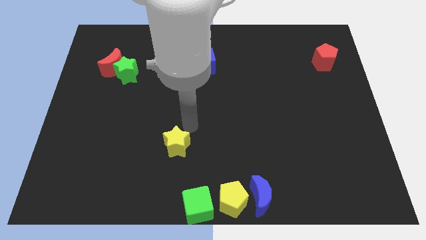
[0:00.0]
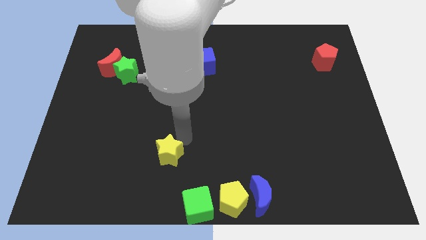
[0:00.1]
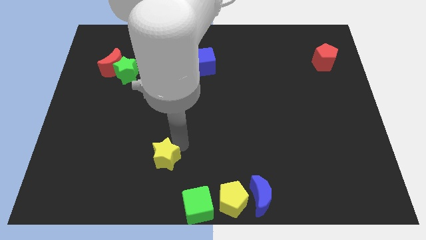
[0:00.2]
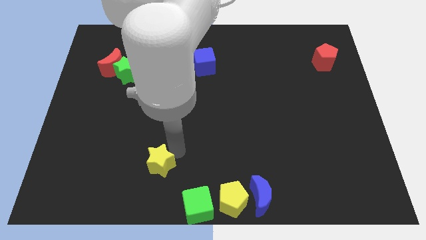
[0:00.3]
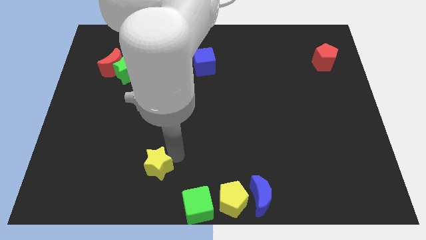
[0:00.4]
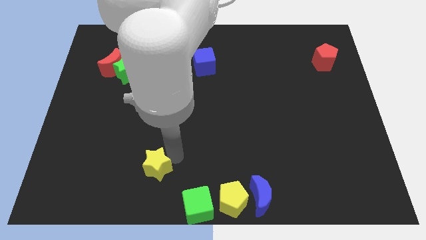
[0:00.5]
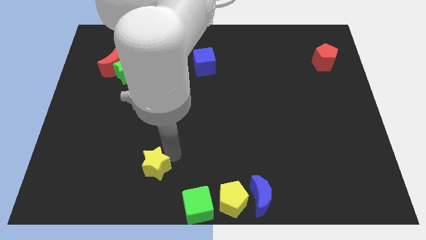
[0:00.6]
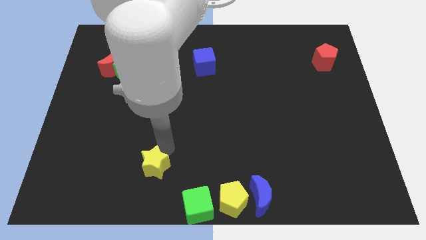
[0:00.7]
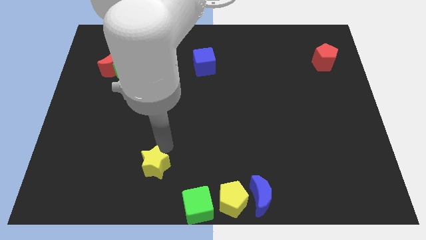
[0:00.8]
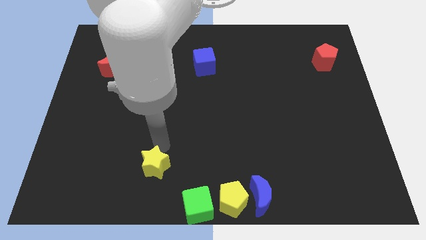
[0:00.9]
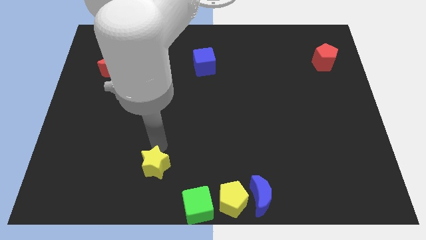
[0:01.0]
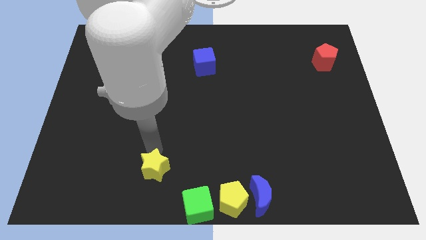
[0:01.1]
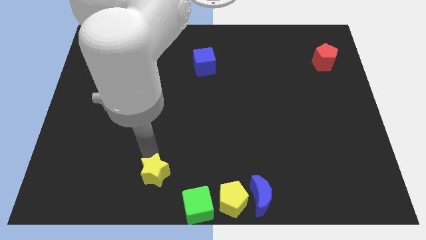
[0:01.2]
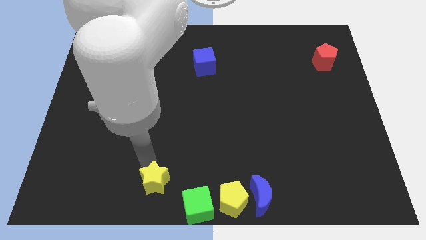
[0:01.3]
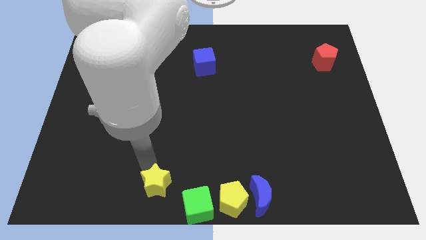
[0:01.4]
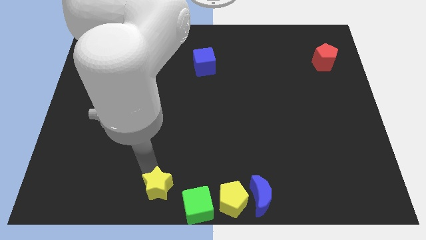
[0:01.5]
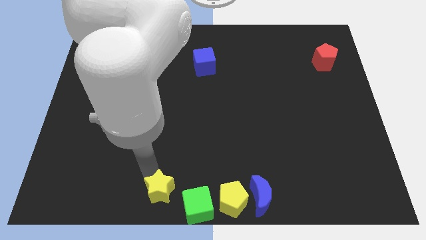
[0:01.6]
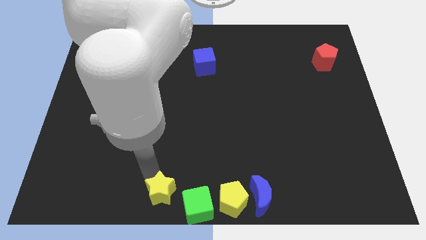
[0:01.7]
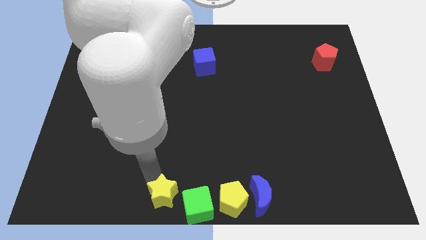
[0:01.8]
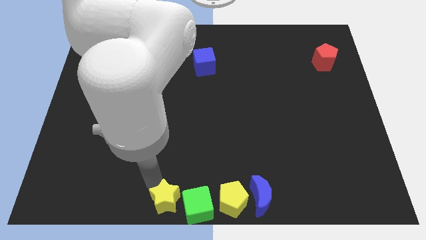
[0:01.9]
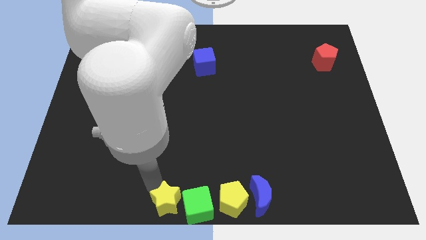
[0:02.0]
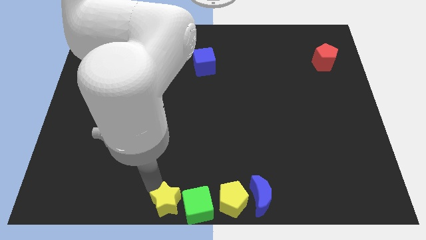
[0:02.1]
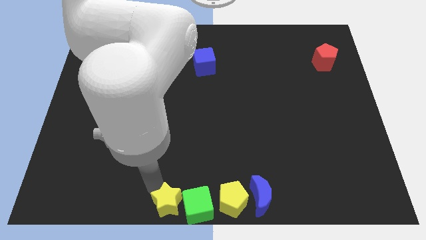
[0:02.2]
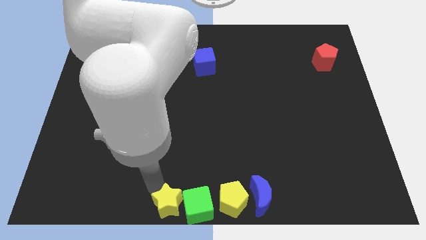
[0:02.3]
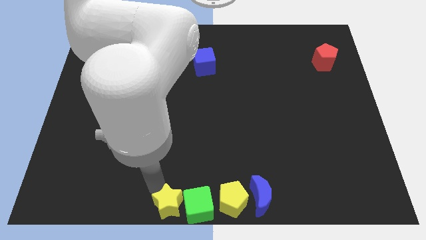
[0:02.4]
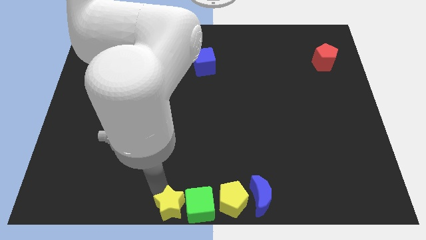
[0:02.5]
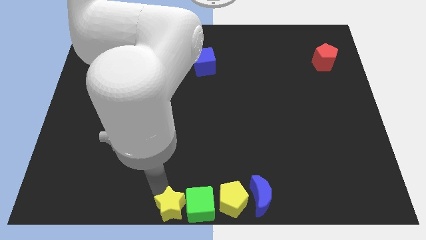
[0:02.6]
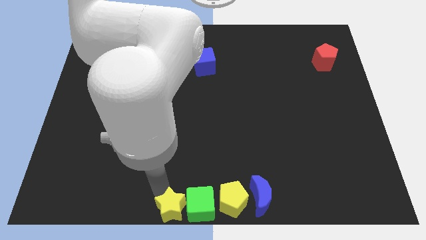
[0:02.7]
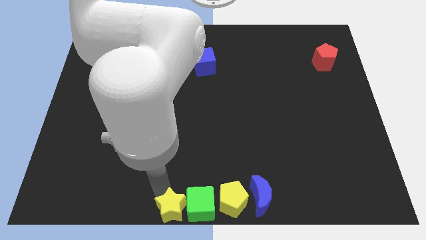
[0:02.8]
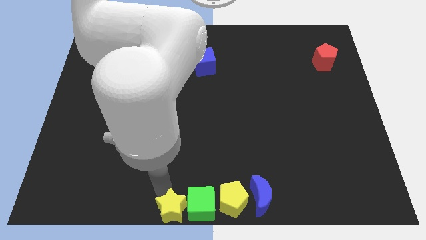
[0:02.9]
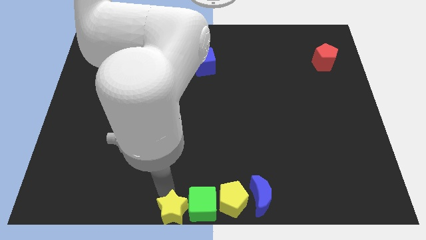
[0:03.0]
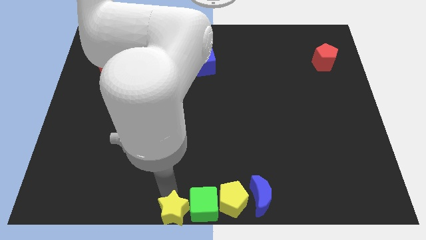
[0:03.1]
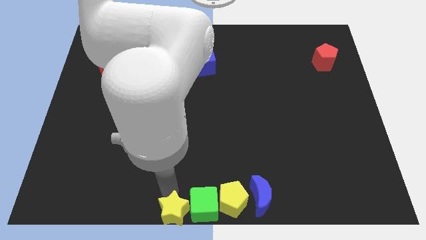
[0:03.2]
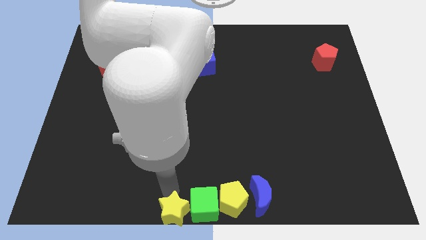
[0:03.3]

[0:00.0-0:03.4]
move yellow star into the group of blocks

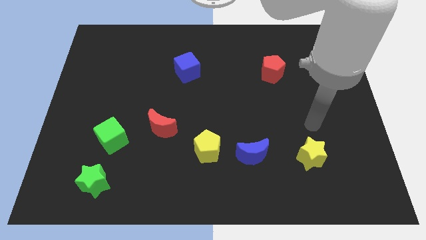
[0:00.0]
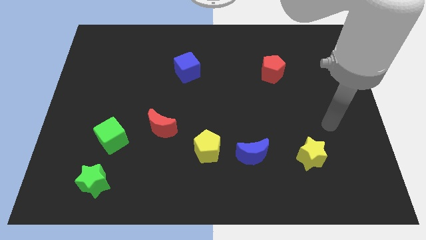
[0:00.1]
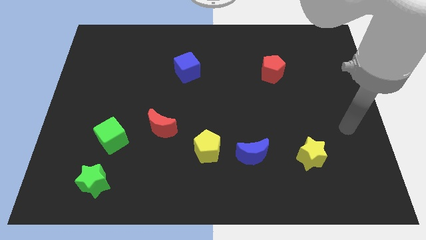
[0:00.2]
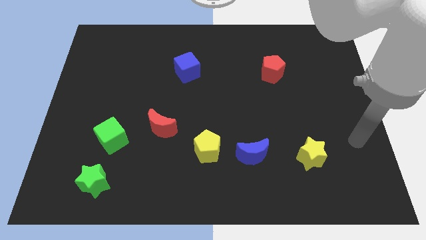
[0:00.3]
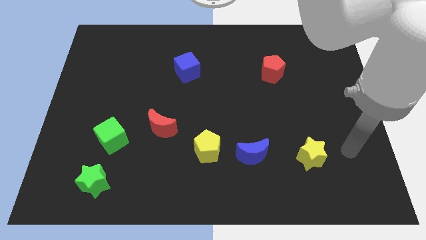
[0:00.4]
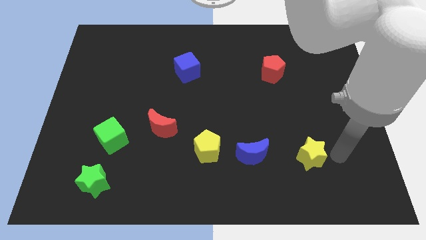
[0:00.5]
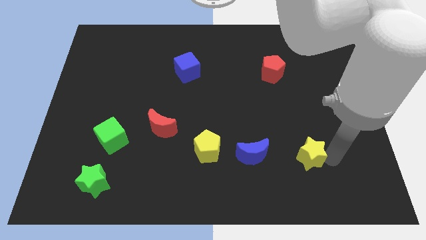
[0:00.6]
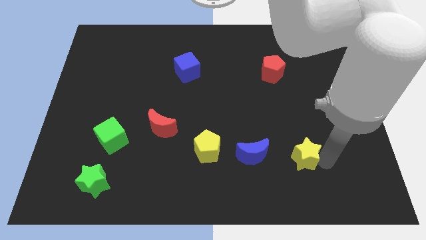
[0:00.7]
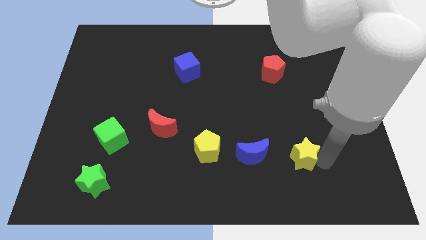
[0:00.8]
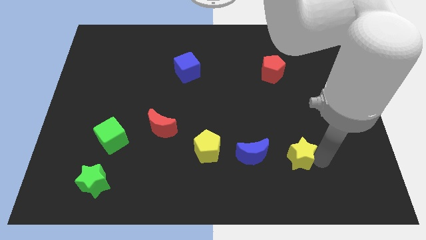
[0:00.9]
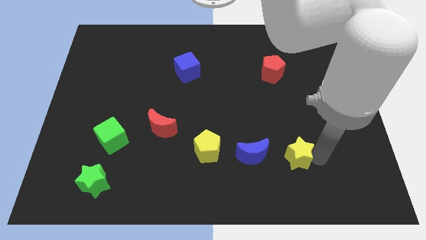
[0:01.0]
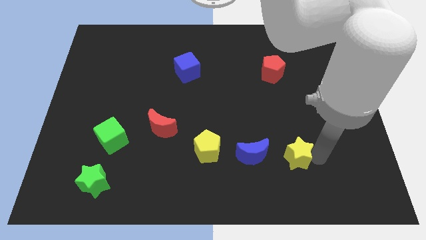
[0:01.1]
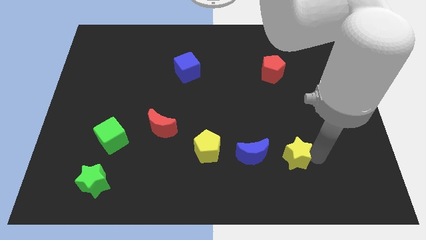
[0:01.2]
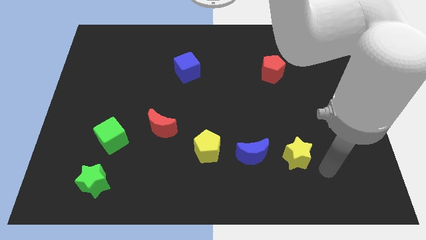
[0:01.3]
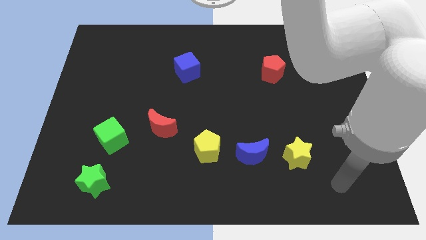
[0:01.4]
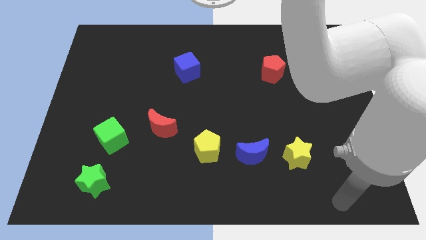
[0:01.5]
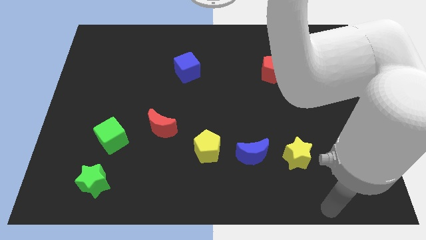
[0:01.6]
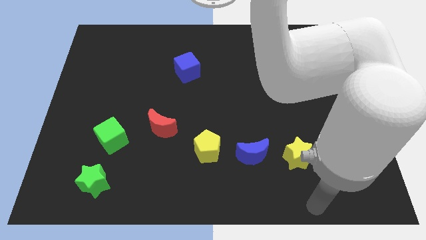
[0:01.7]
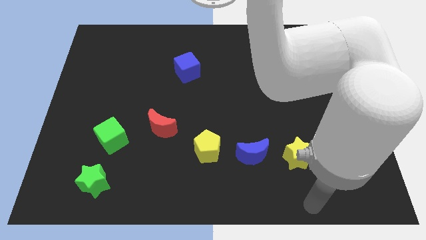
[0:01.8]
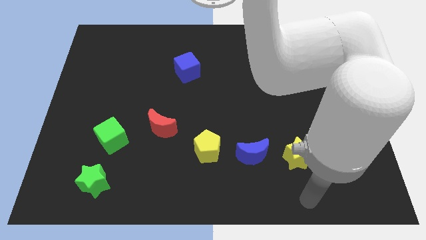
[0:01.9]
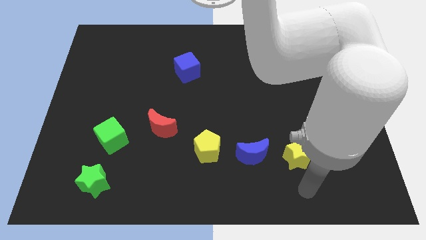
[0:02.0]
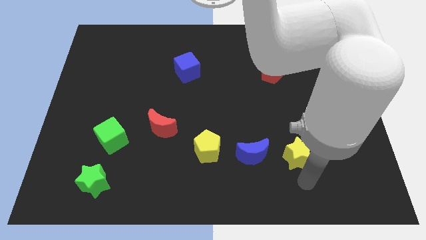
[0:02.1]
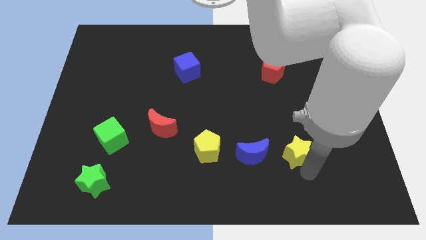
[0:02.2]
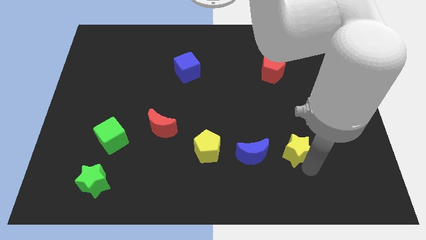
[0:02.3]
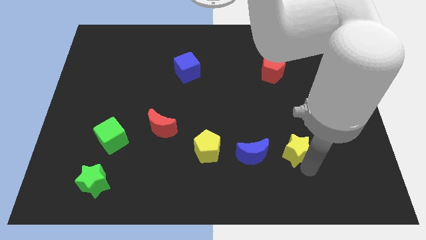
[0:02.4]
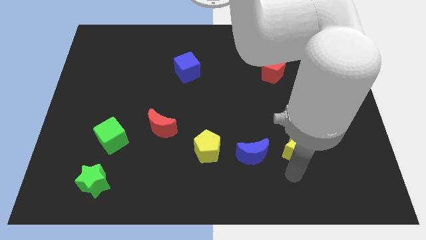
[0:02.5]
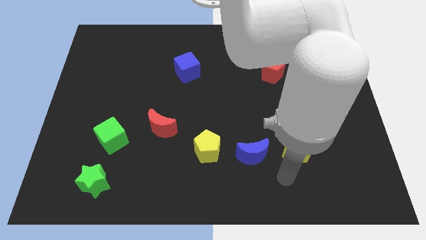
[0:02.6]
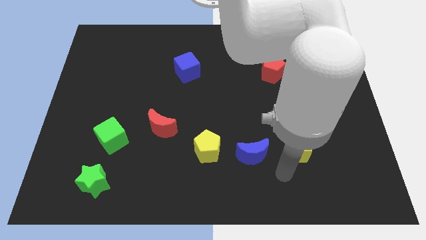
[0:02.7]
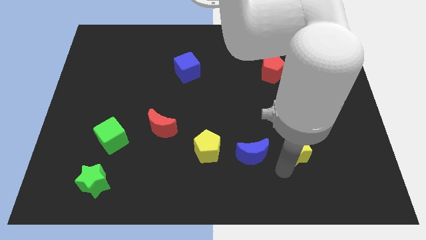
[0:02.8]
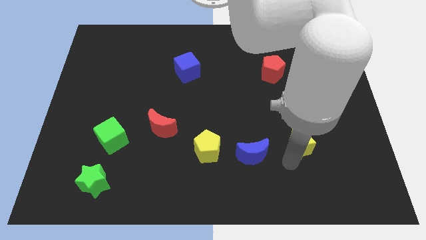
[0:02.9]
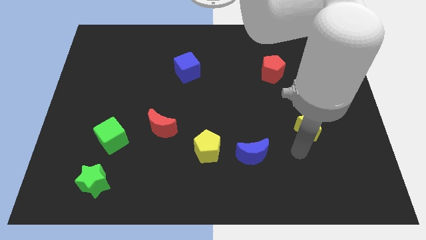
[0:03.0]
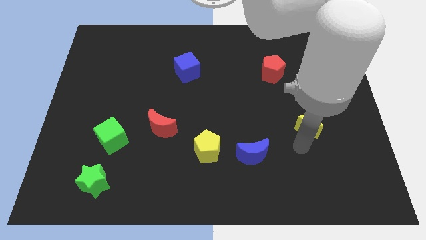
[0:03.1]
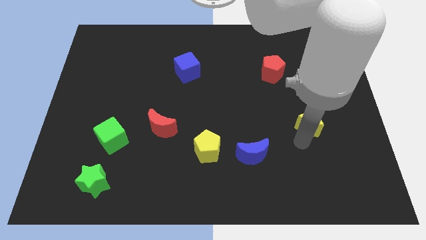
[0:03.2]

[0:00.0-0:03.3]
place yellow star to the top right of the blue moon

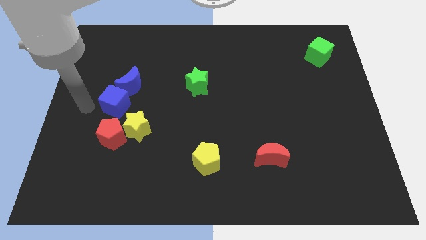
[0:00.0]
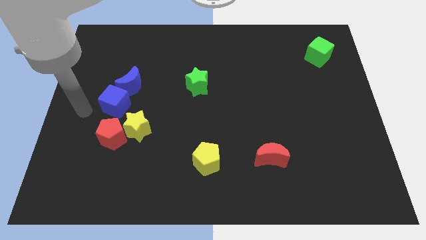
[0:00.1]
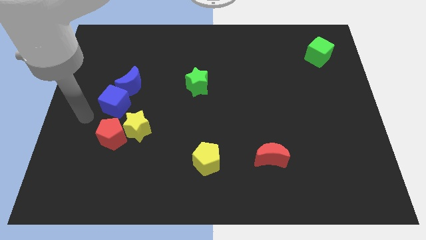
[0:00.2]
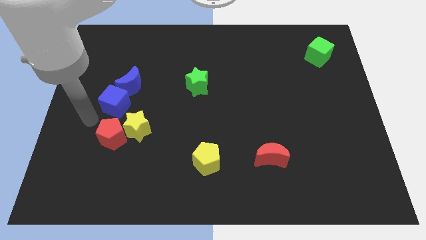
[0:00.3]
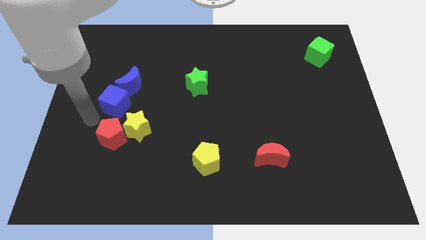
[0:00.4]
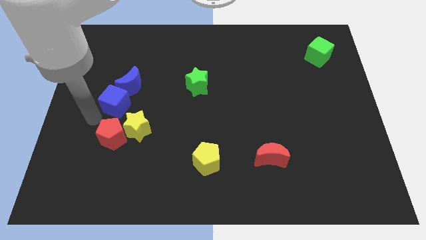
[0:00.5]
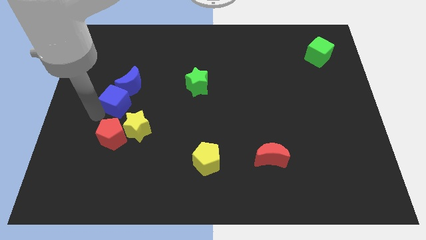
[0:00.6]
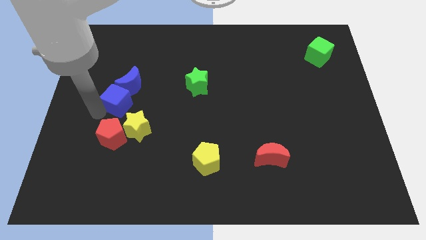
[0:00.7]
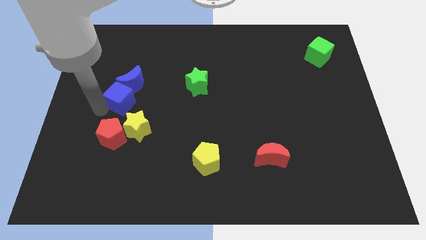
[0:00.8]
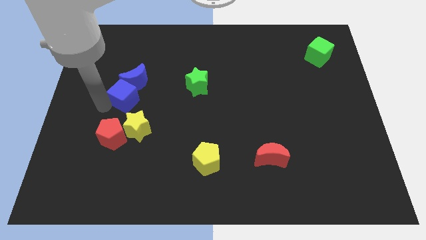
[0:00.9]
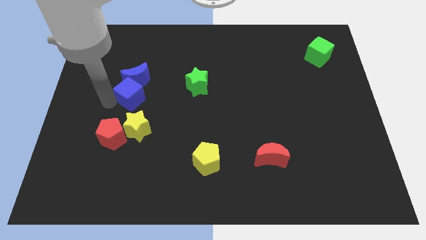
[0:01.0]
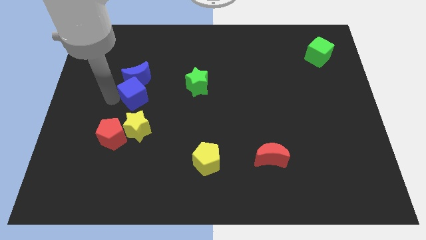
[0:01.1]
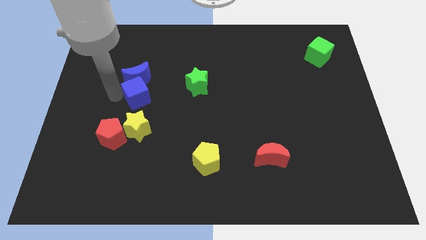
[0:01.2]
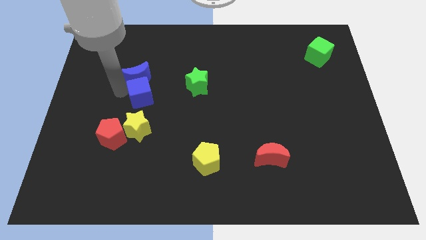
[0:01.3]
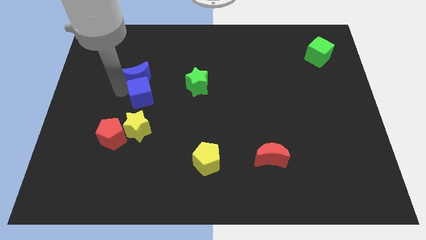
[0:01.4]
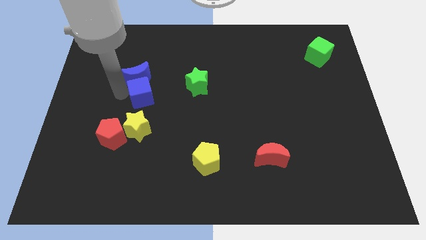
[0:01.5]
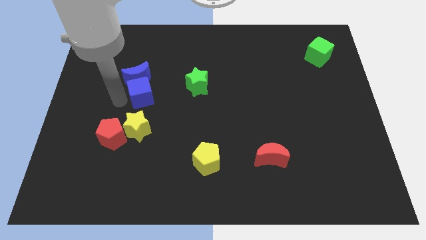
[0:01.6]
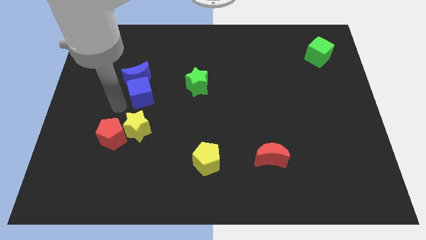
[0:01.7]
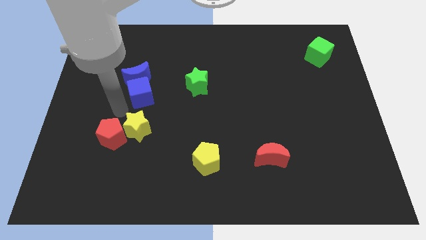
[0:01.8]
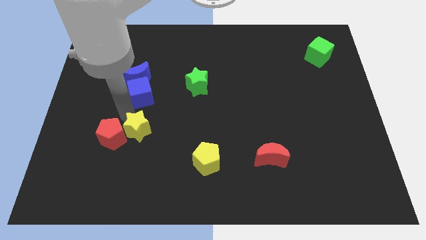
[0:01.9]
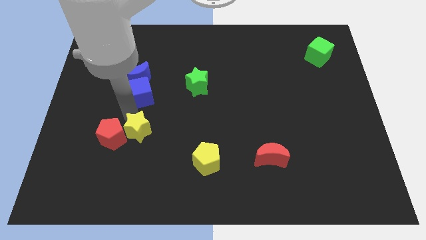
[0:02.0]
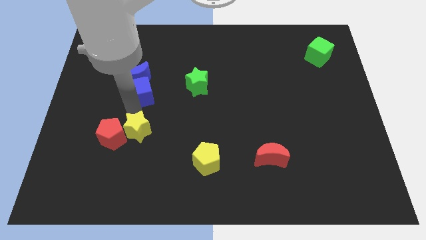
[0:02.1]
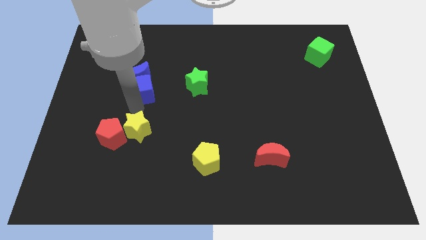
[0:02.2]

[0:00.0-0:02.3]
push the blue cube into the blue moon
